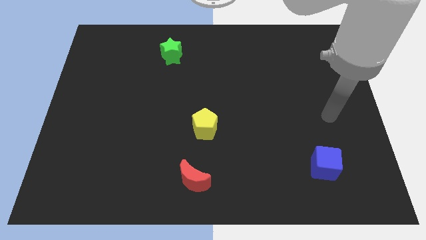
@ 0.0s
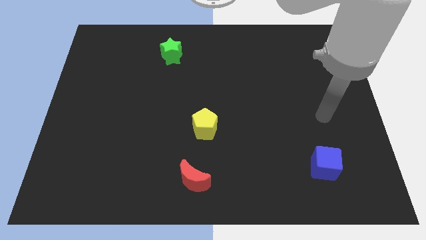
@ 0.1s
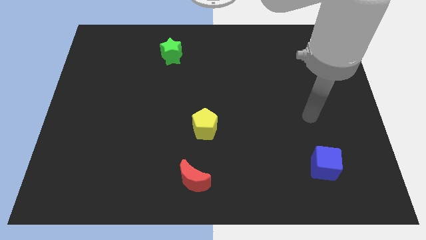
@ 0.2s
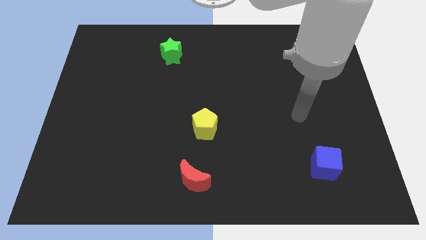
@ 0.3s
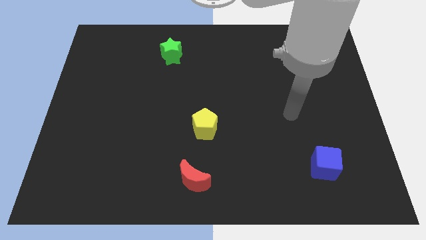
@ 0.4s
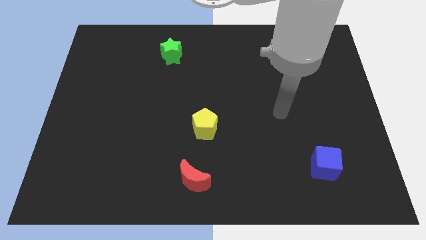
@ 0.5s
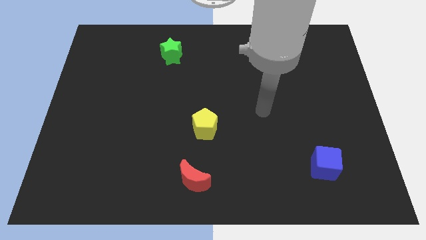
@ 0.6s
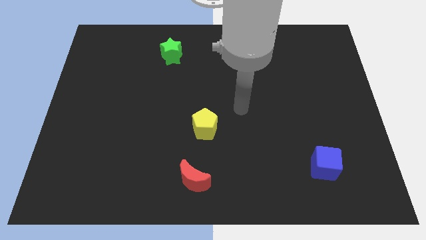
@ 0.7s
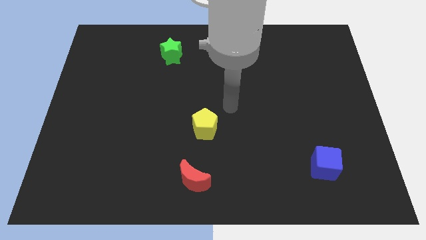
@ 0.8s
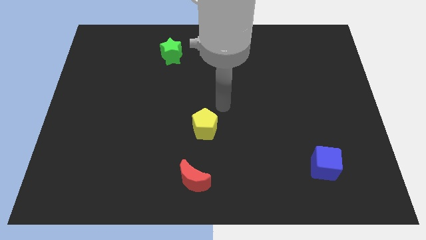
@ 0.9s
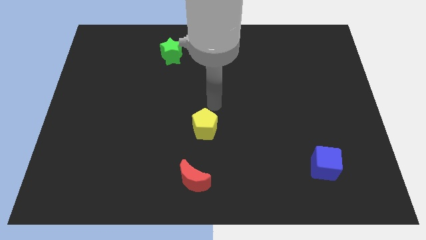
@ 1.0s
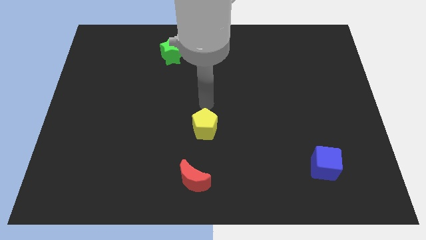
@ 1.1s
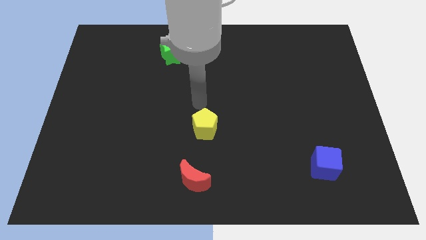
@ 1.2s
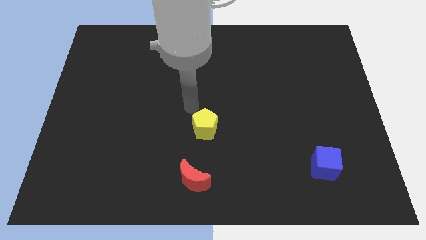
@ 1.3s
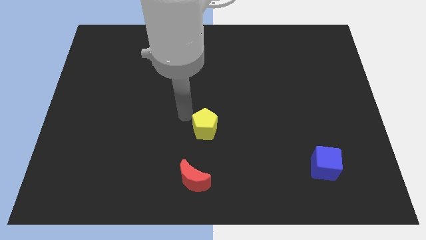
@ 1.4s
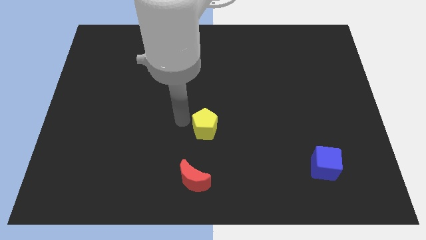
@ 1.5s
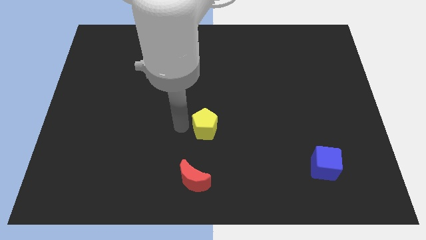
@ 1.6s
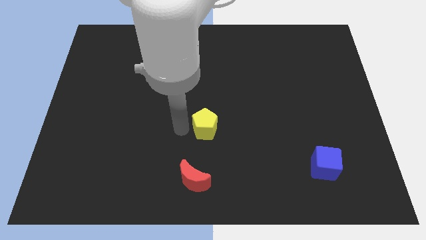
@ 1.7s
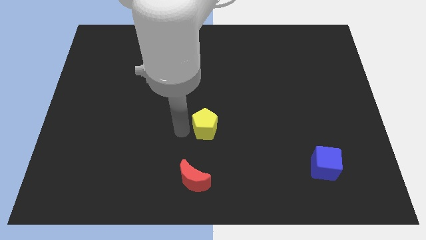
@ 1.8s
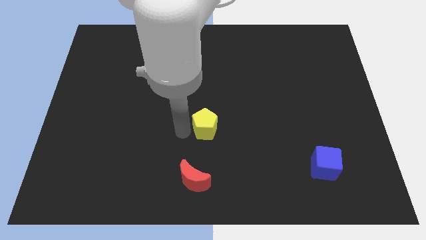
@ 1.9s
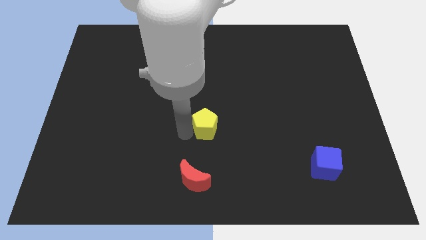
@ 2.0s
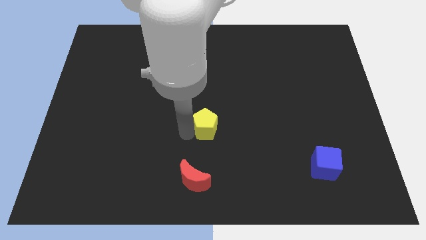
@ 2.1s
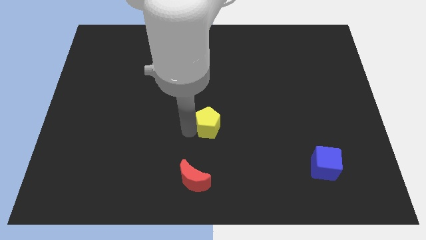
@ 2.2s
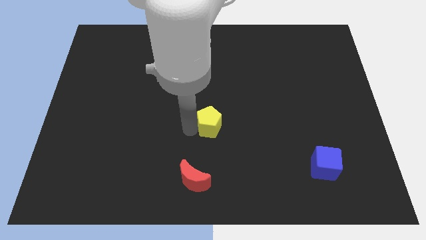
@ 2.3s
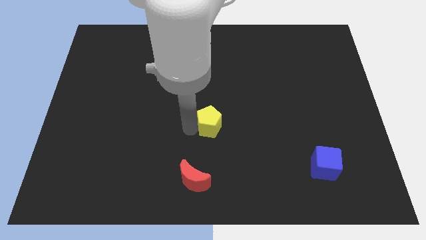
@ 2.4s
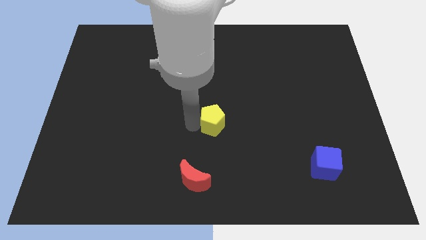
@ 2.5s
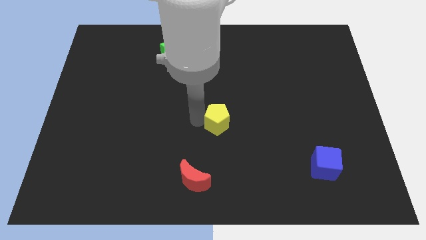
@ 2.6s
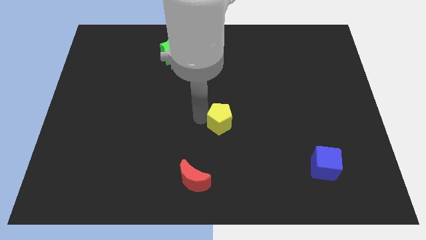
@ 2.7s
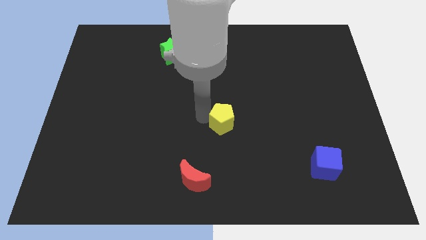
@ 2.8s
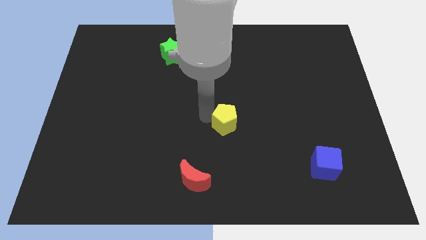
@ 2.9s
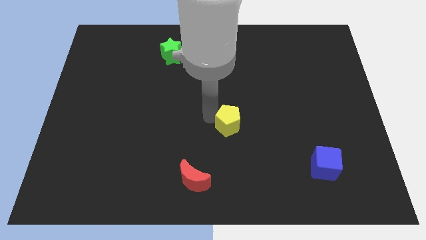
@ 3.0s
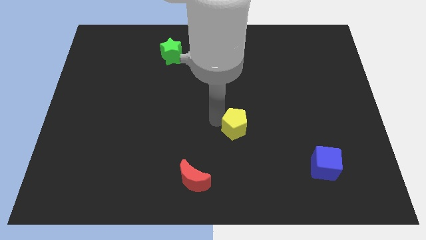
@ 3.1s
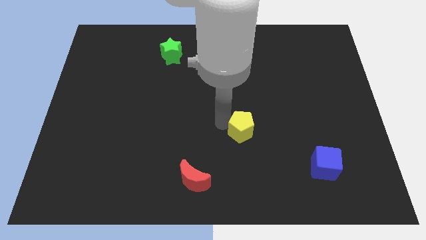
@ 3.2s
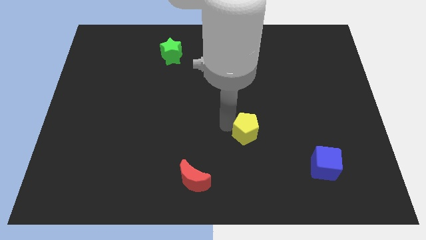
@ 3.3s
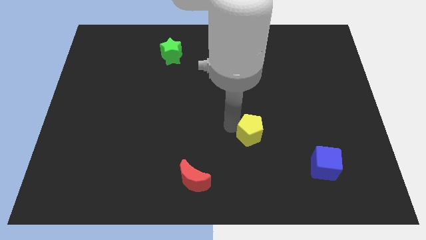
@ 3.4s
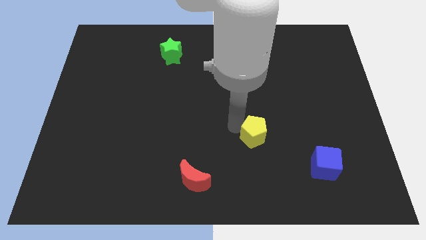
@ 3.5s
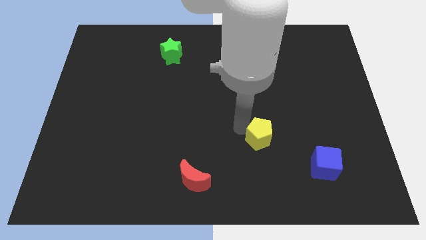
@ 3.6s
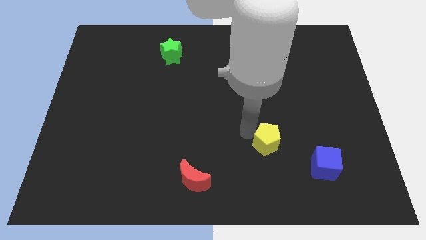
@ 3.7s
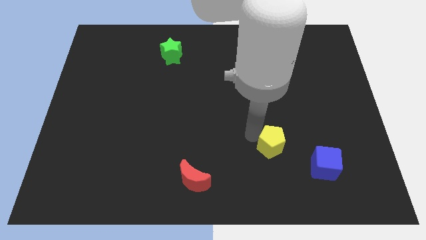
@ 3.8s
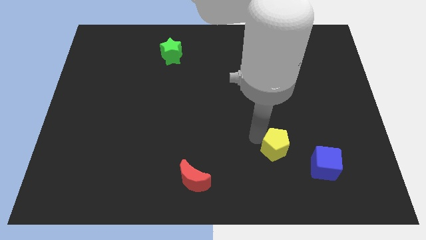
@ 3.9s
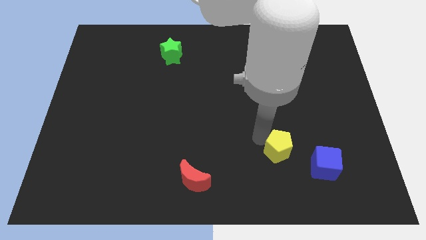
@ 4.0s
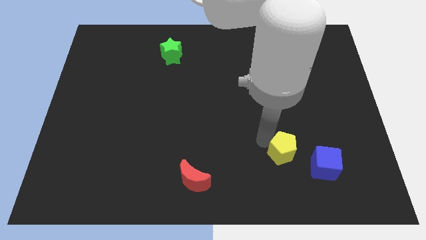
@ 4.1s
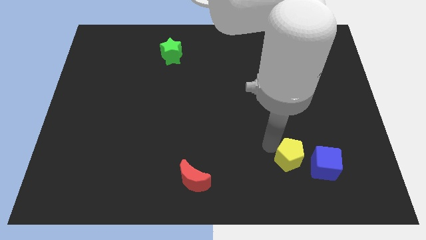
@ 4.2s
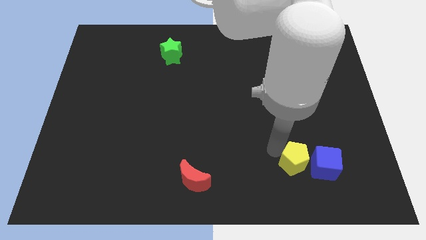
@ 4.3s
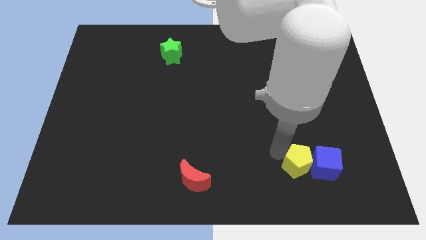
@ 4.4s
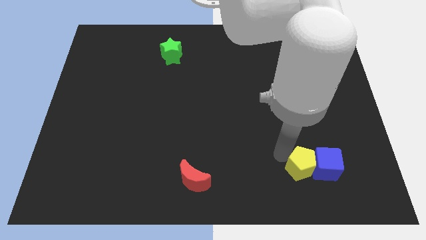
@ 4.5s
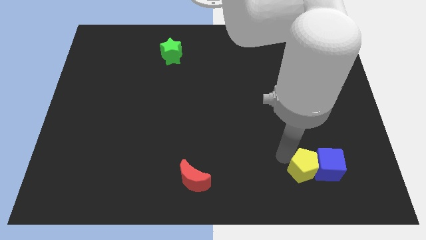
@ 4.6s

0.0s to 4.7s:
push the yellow block close to the blue block

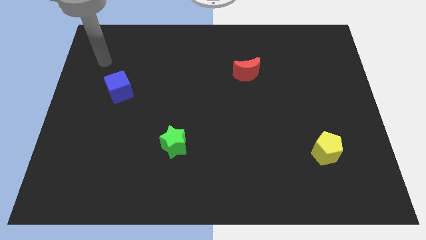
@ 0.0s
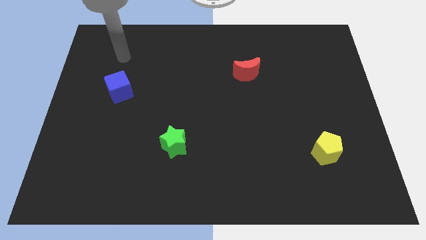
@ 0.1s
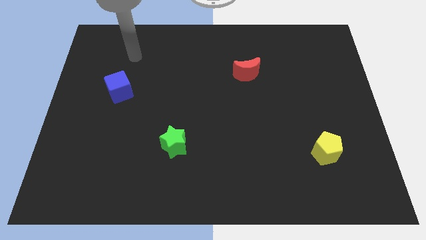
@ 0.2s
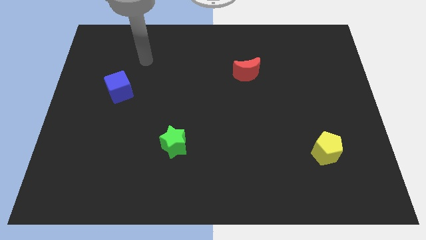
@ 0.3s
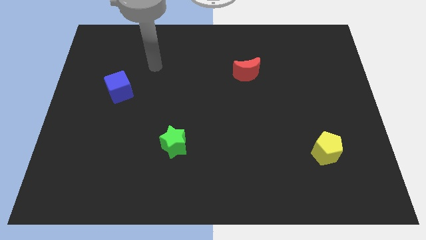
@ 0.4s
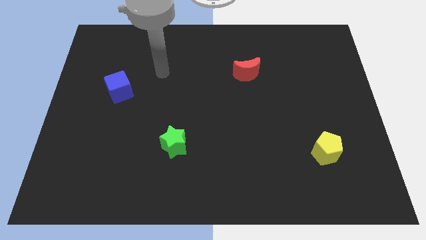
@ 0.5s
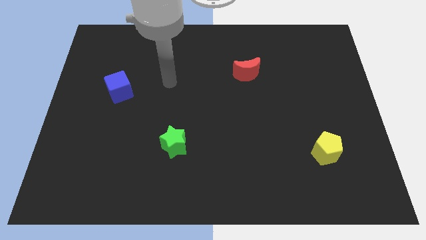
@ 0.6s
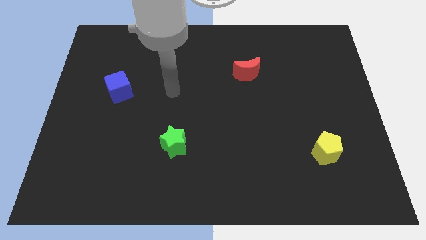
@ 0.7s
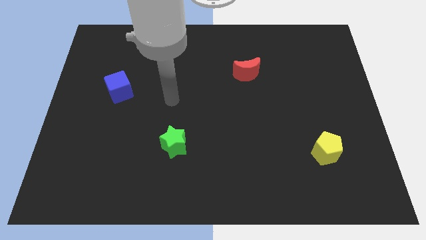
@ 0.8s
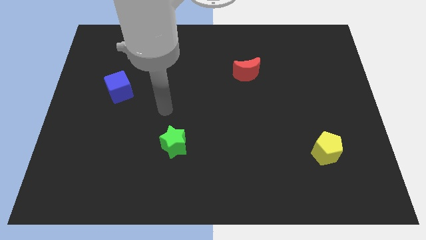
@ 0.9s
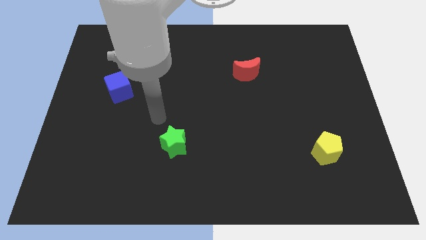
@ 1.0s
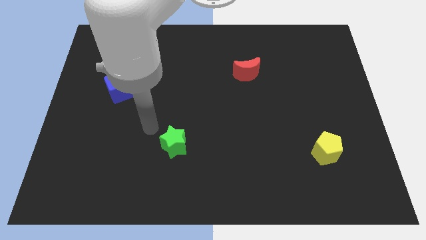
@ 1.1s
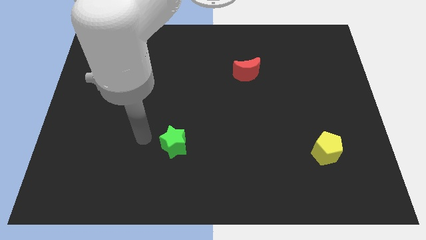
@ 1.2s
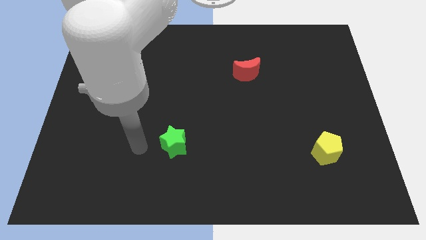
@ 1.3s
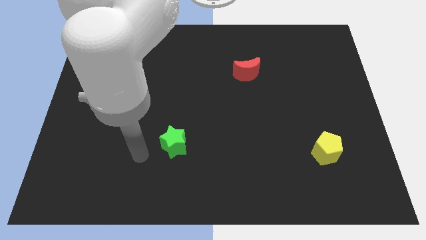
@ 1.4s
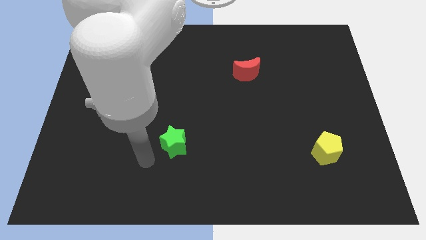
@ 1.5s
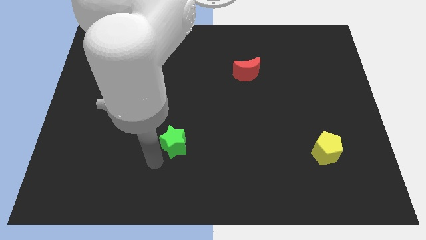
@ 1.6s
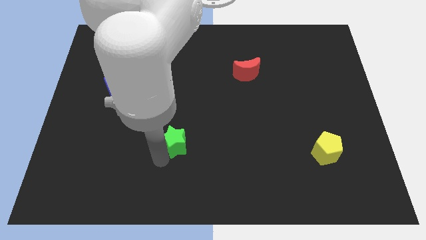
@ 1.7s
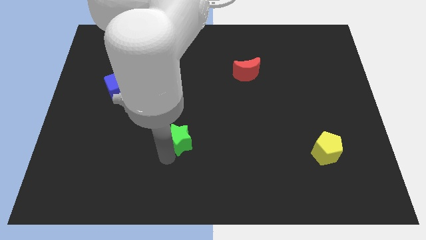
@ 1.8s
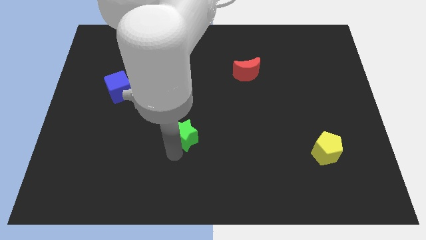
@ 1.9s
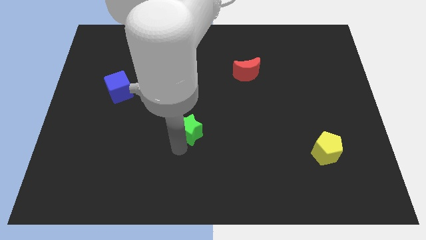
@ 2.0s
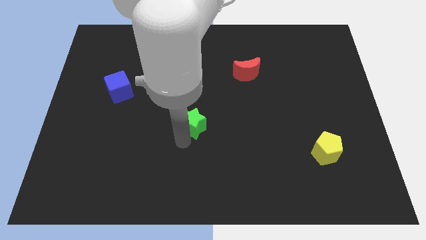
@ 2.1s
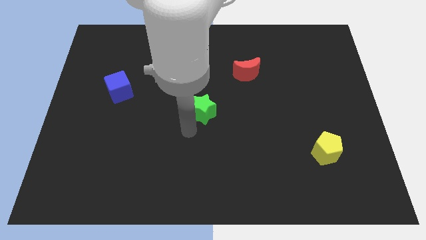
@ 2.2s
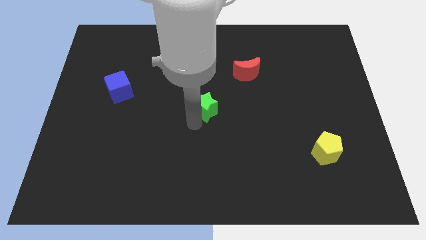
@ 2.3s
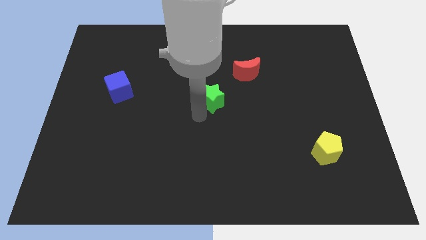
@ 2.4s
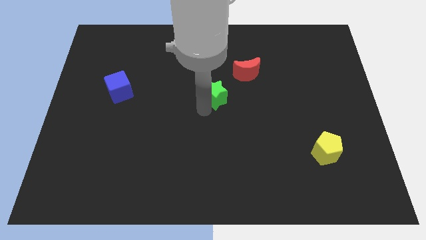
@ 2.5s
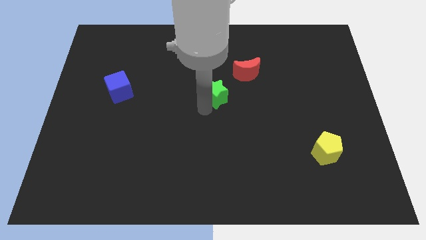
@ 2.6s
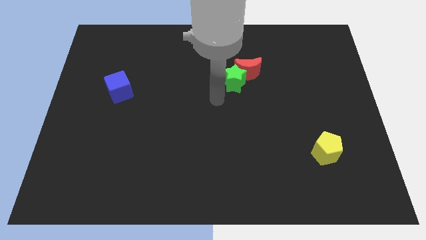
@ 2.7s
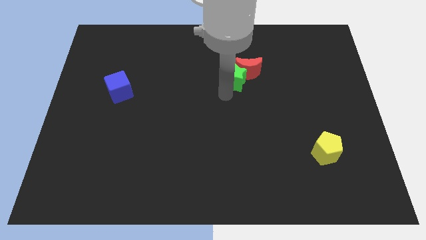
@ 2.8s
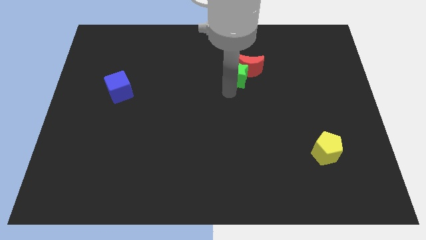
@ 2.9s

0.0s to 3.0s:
move the green star to the red block

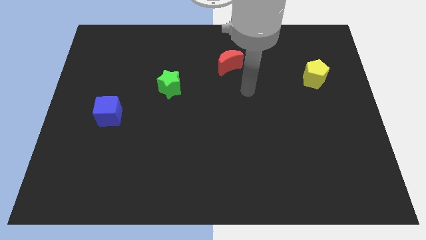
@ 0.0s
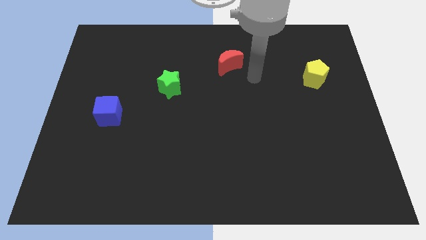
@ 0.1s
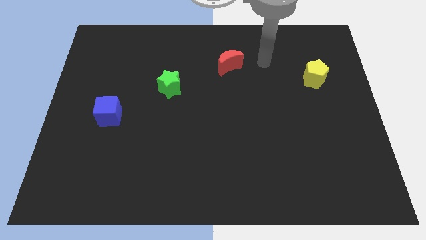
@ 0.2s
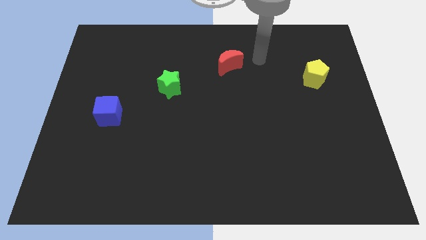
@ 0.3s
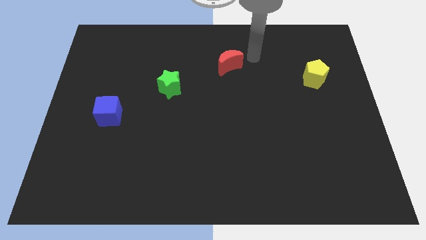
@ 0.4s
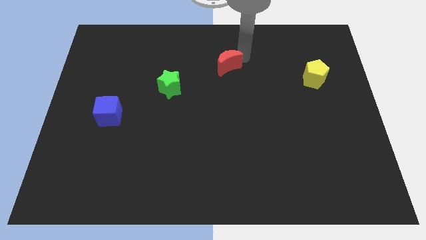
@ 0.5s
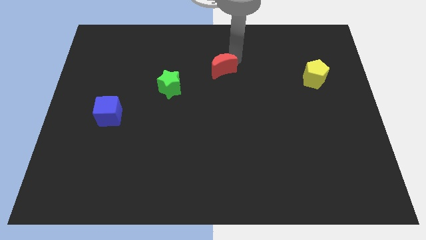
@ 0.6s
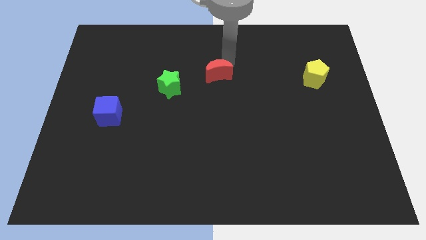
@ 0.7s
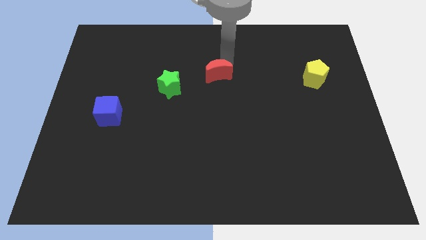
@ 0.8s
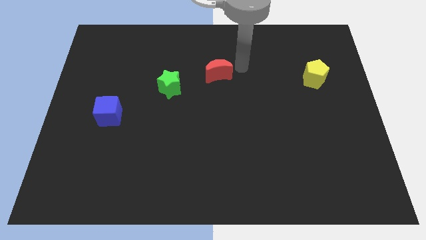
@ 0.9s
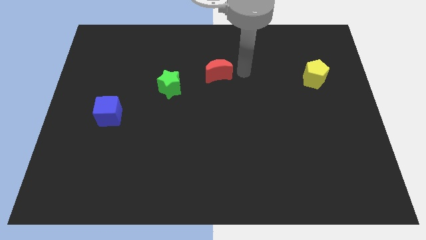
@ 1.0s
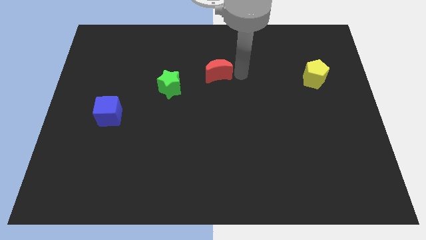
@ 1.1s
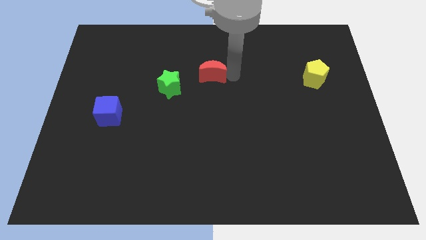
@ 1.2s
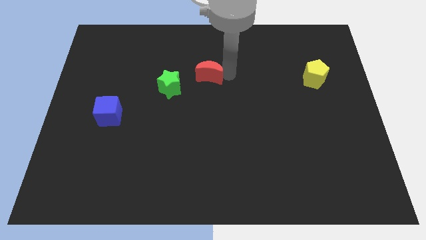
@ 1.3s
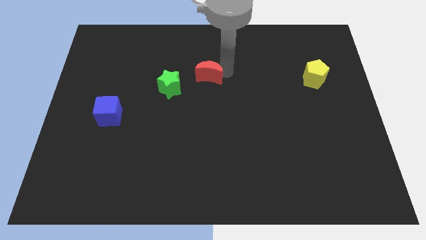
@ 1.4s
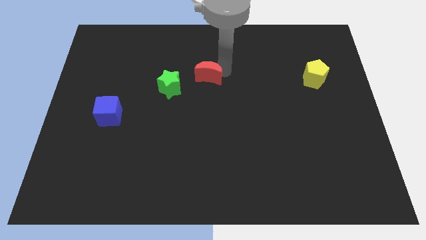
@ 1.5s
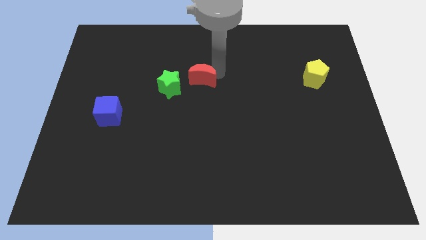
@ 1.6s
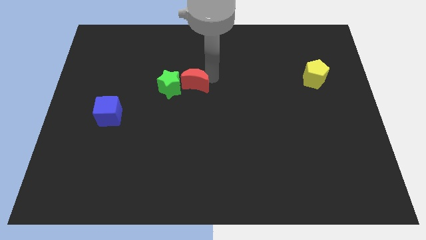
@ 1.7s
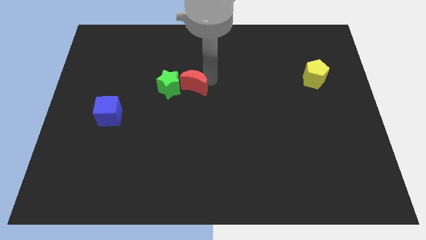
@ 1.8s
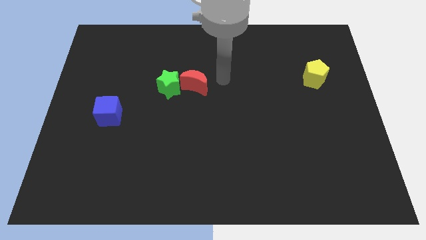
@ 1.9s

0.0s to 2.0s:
slide the moon towards the green block
